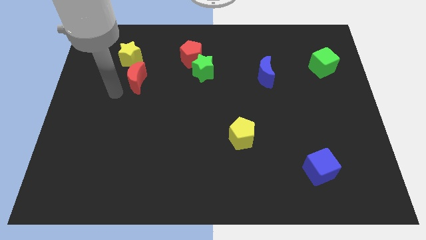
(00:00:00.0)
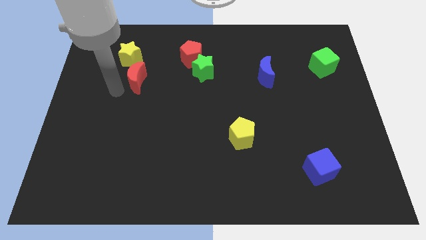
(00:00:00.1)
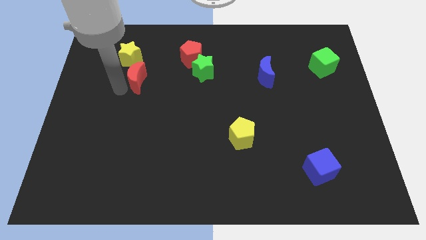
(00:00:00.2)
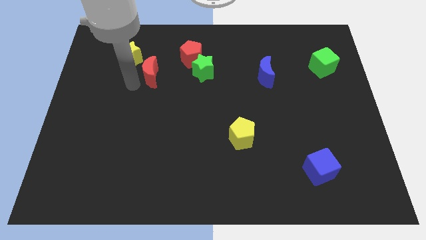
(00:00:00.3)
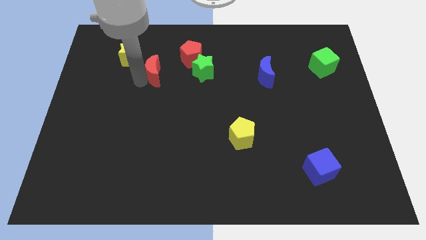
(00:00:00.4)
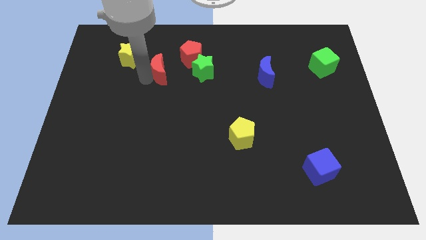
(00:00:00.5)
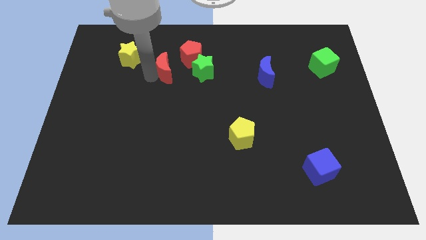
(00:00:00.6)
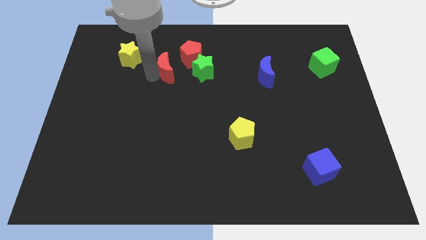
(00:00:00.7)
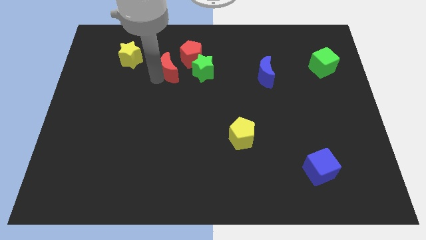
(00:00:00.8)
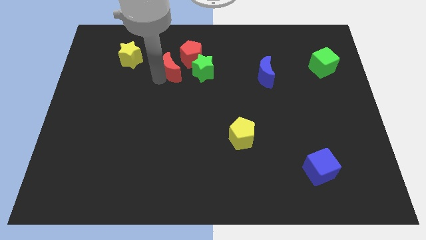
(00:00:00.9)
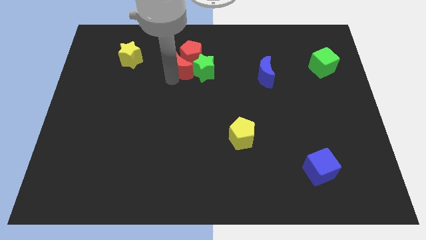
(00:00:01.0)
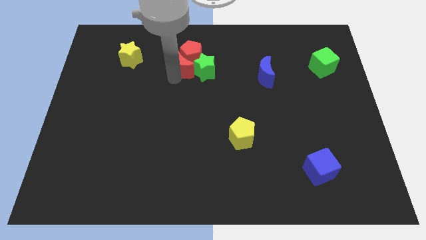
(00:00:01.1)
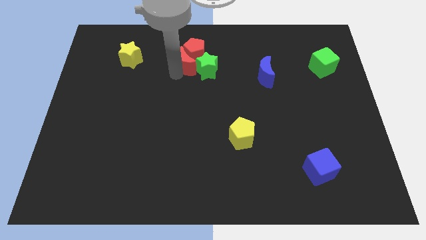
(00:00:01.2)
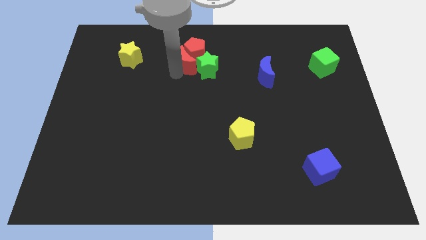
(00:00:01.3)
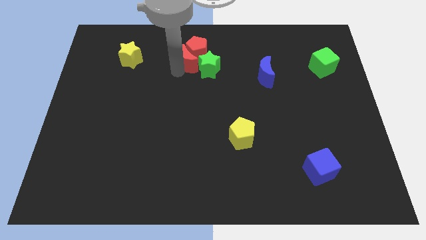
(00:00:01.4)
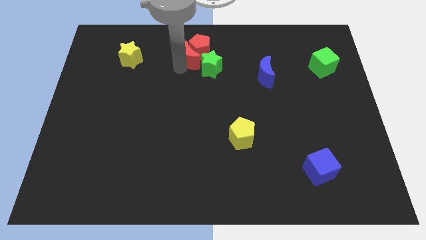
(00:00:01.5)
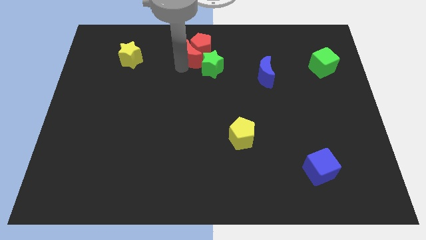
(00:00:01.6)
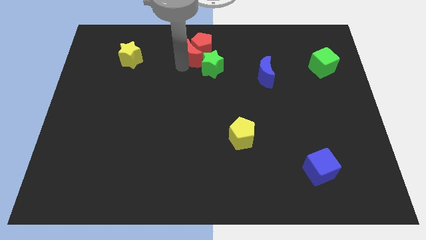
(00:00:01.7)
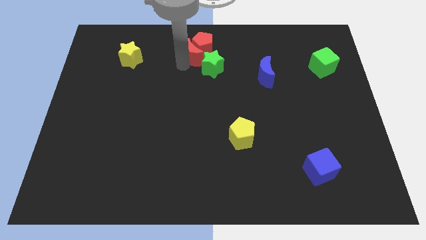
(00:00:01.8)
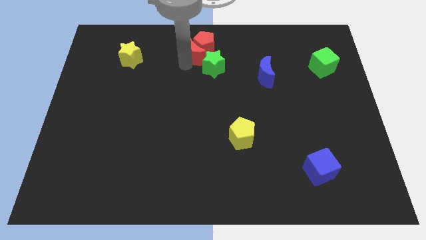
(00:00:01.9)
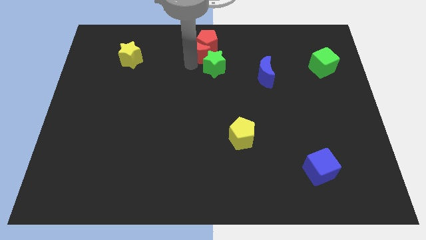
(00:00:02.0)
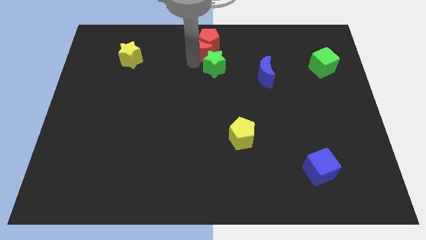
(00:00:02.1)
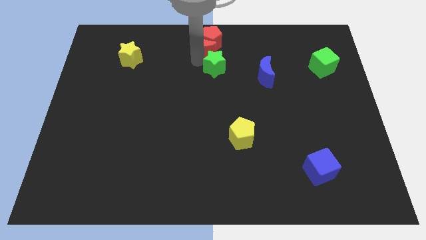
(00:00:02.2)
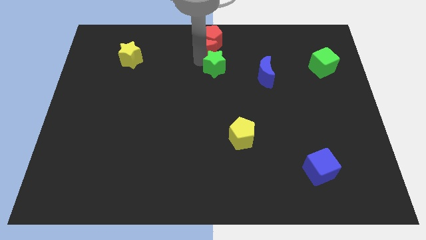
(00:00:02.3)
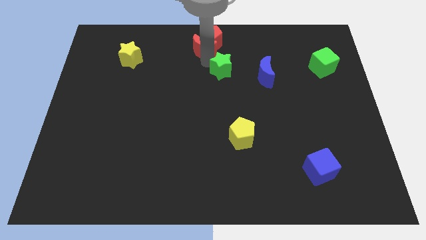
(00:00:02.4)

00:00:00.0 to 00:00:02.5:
push red moon in to red pentagon

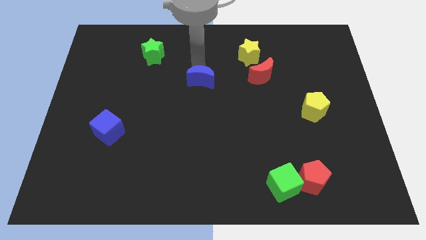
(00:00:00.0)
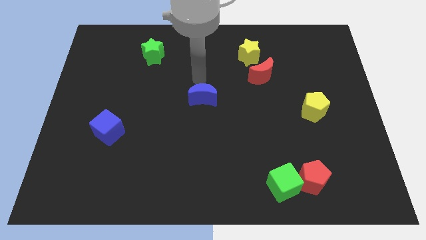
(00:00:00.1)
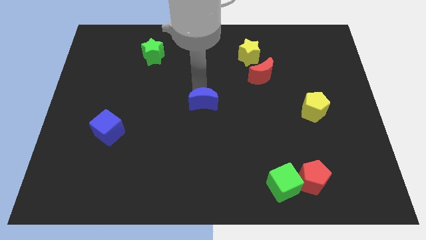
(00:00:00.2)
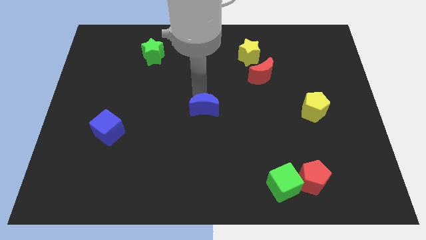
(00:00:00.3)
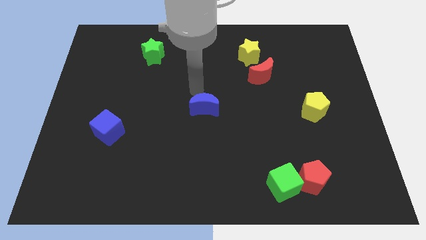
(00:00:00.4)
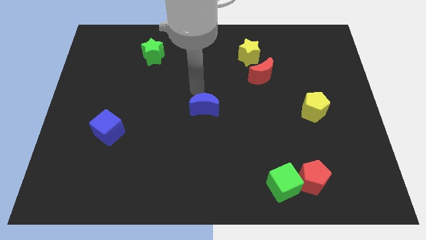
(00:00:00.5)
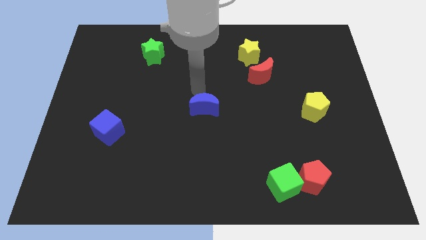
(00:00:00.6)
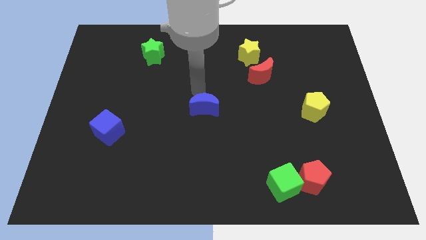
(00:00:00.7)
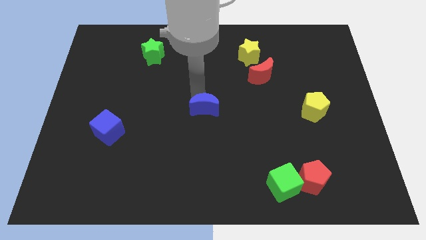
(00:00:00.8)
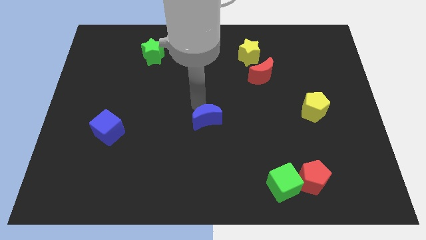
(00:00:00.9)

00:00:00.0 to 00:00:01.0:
push the blue crescent to the center of the board

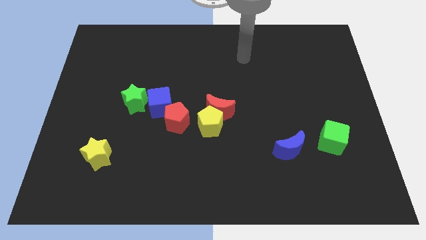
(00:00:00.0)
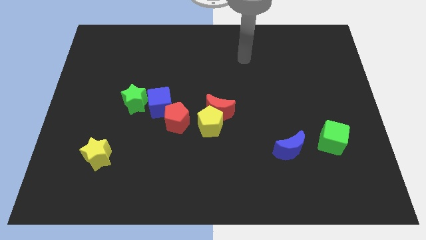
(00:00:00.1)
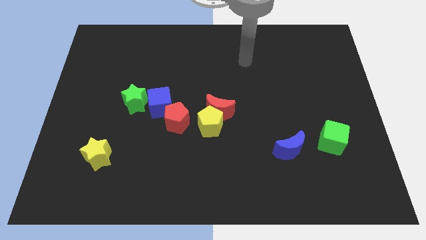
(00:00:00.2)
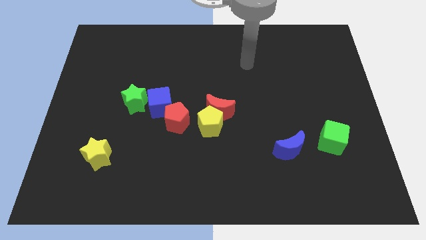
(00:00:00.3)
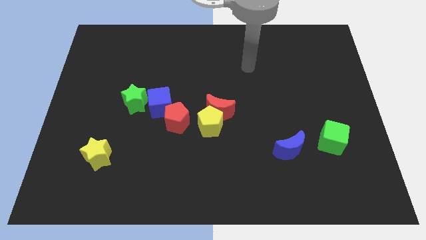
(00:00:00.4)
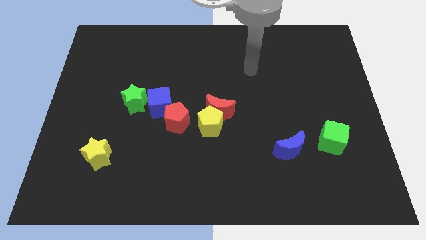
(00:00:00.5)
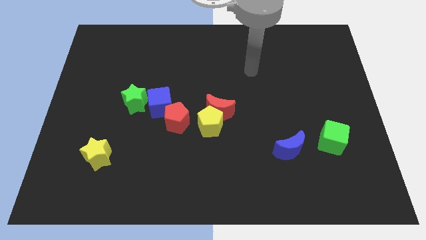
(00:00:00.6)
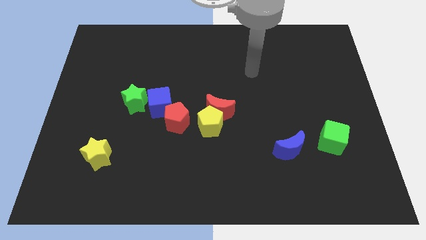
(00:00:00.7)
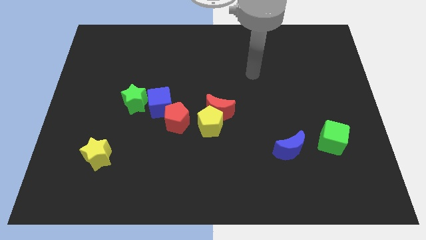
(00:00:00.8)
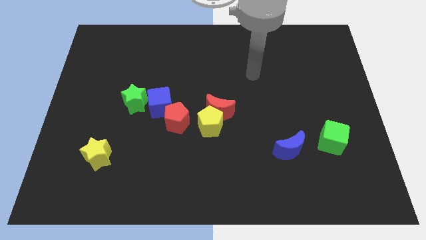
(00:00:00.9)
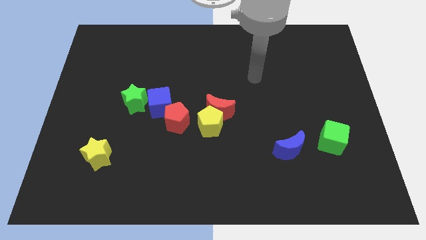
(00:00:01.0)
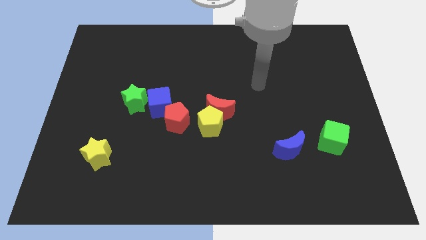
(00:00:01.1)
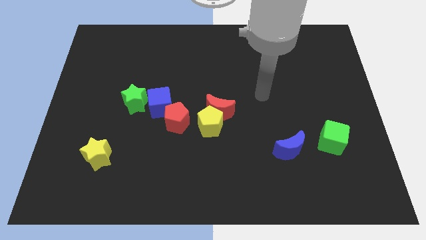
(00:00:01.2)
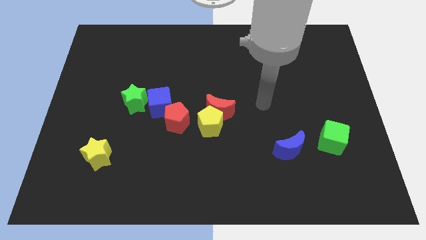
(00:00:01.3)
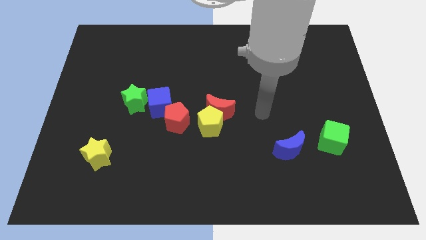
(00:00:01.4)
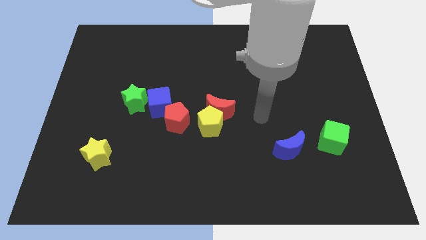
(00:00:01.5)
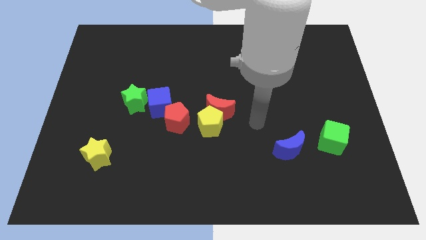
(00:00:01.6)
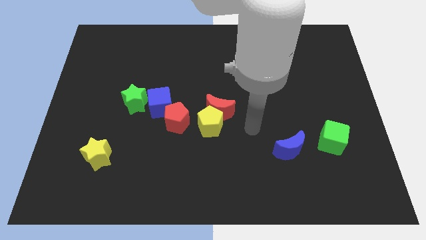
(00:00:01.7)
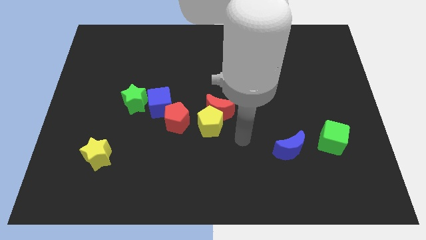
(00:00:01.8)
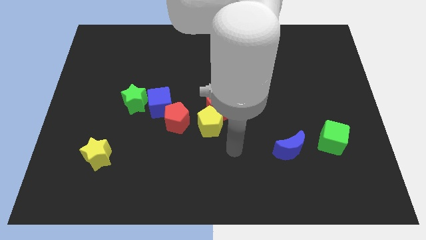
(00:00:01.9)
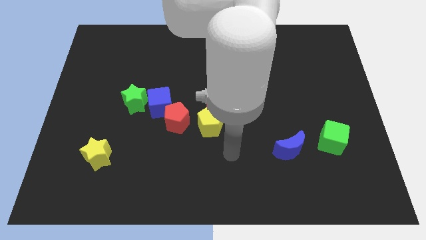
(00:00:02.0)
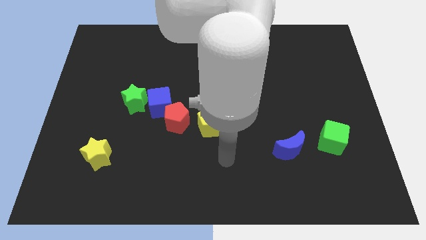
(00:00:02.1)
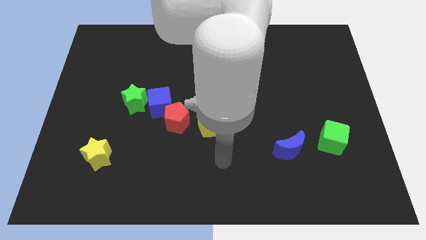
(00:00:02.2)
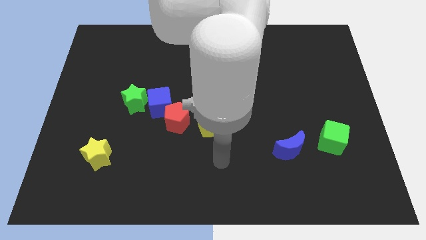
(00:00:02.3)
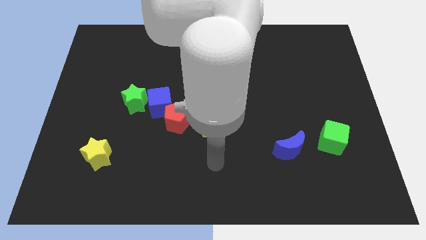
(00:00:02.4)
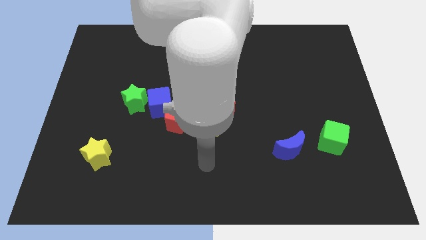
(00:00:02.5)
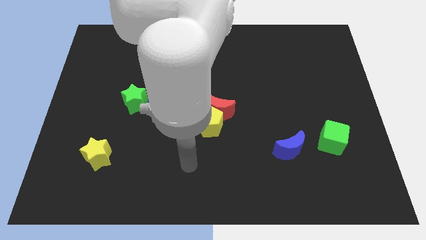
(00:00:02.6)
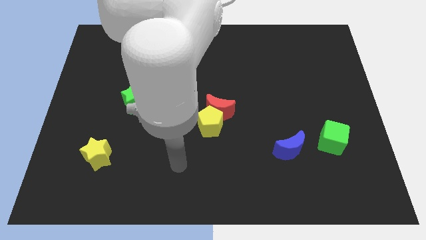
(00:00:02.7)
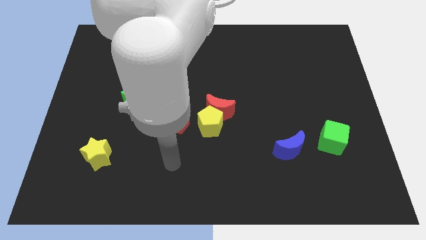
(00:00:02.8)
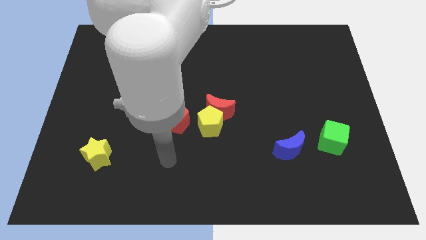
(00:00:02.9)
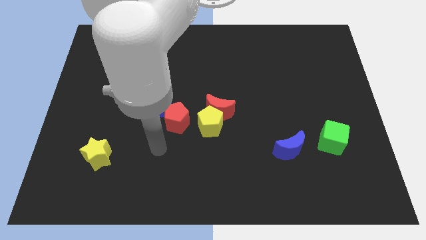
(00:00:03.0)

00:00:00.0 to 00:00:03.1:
go near the red pentagon

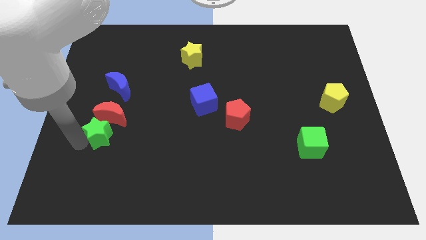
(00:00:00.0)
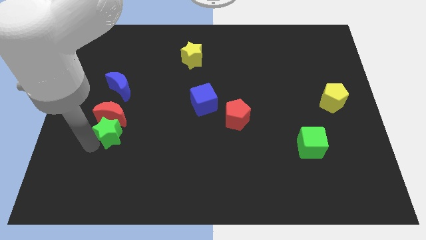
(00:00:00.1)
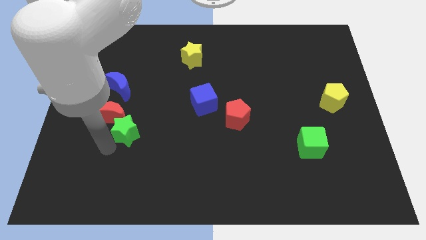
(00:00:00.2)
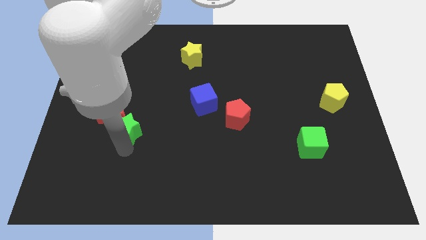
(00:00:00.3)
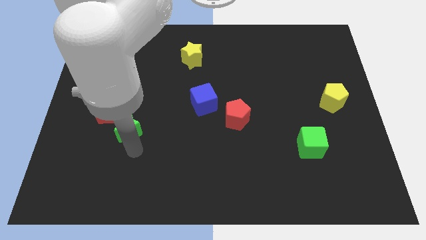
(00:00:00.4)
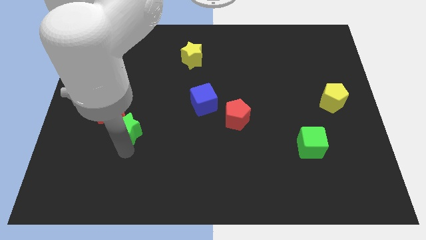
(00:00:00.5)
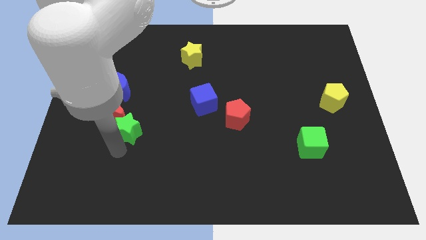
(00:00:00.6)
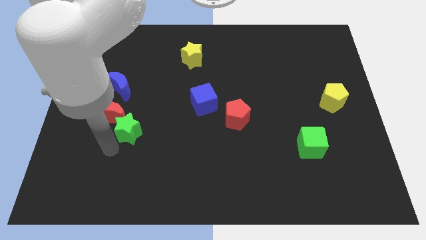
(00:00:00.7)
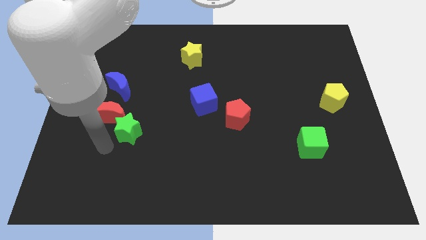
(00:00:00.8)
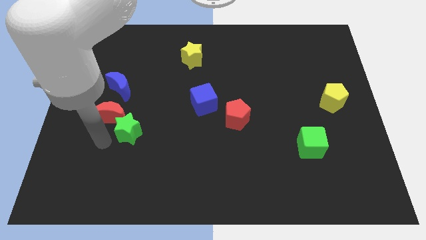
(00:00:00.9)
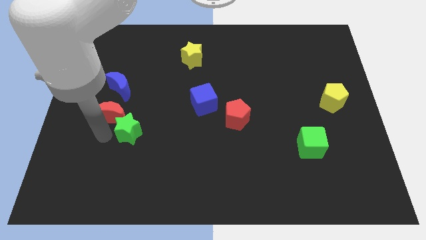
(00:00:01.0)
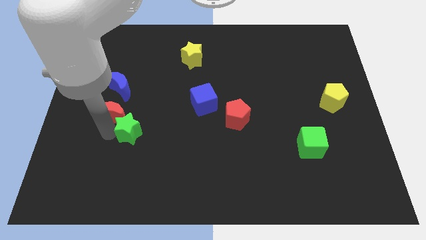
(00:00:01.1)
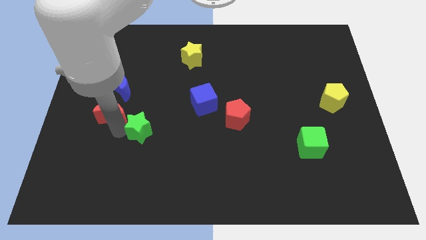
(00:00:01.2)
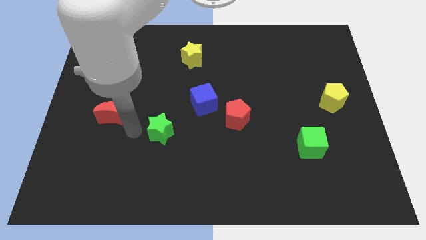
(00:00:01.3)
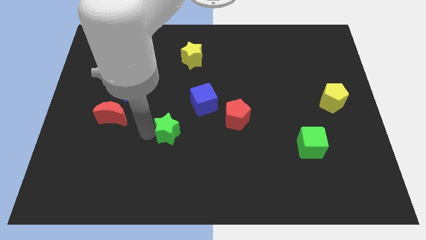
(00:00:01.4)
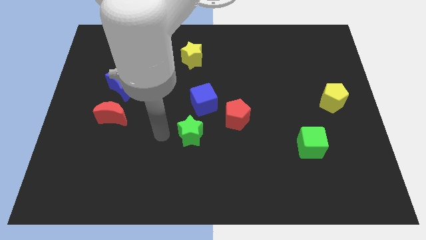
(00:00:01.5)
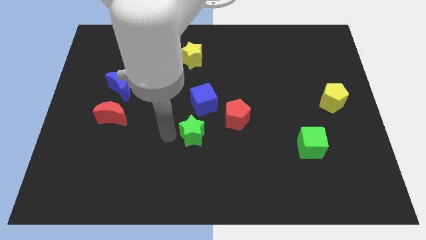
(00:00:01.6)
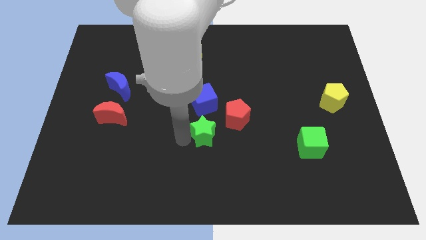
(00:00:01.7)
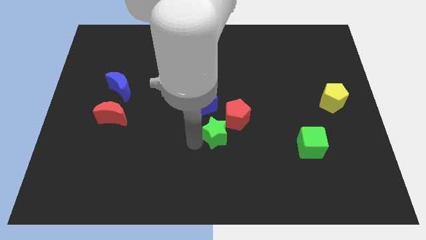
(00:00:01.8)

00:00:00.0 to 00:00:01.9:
move the green star towards bottom left of red pentagon

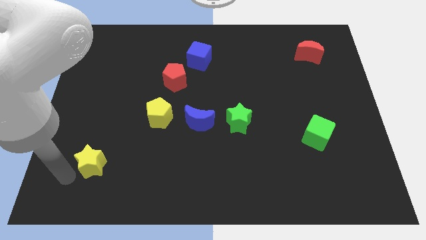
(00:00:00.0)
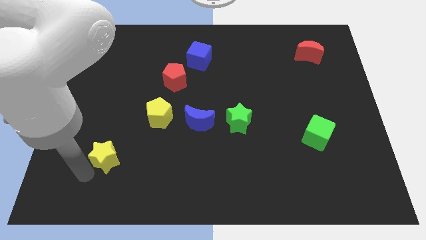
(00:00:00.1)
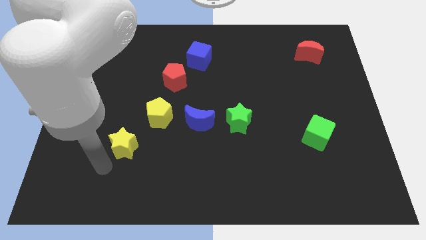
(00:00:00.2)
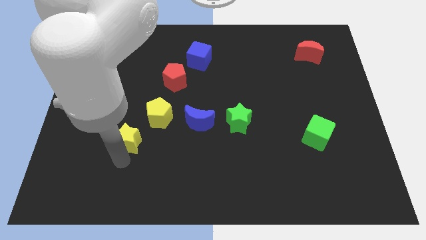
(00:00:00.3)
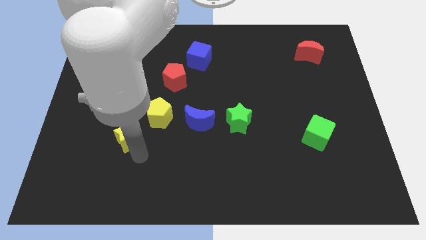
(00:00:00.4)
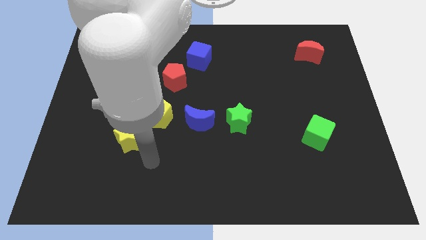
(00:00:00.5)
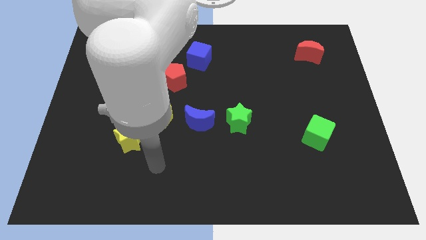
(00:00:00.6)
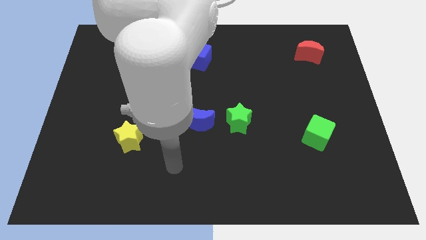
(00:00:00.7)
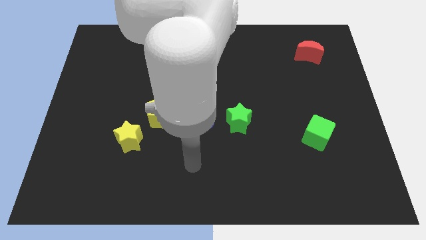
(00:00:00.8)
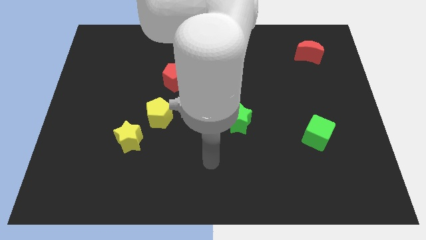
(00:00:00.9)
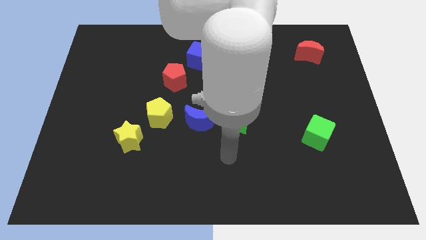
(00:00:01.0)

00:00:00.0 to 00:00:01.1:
move the yellow star up slightly
